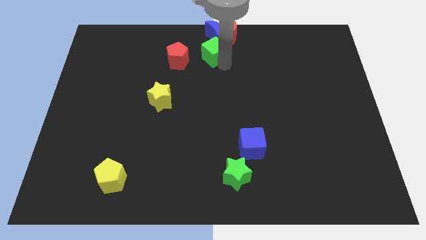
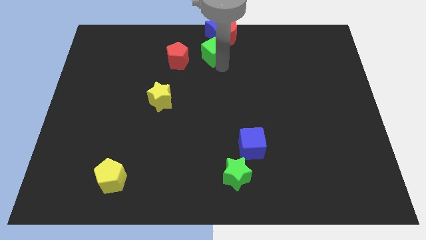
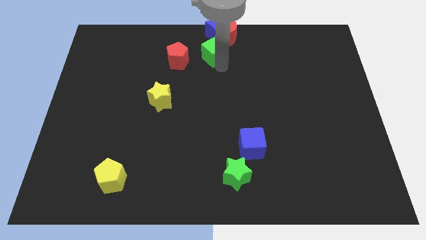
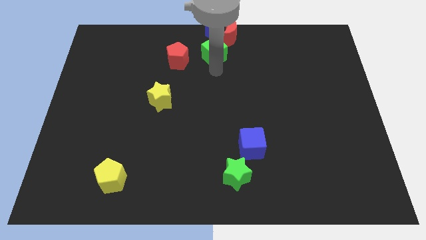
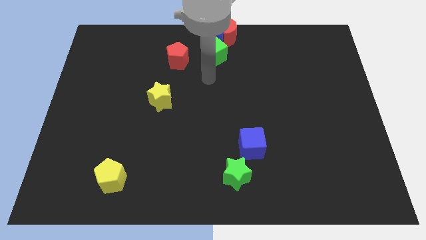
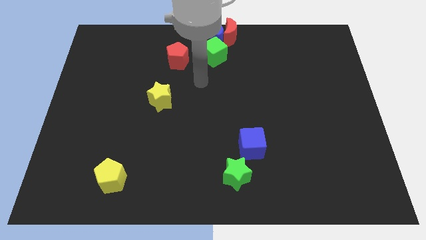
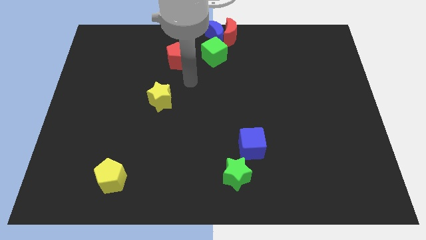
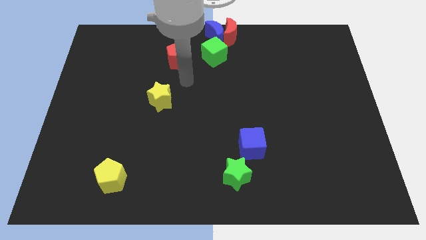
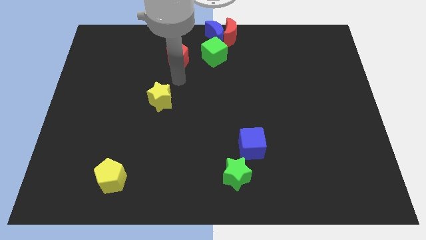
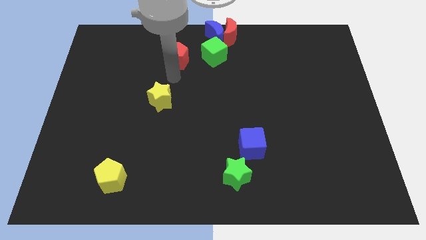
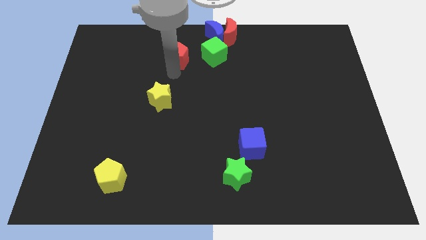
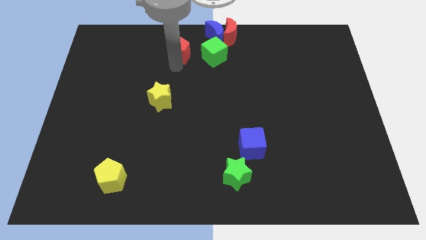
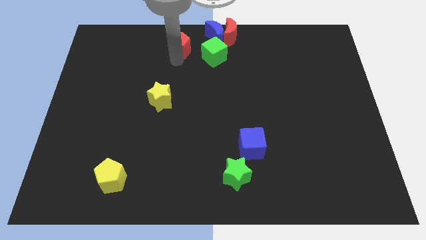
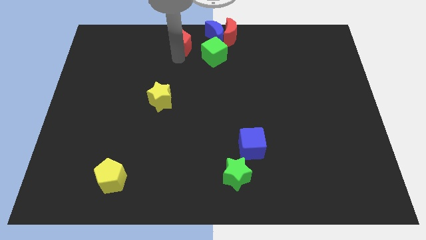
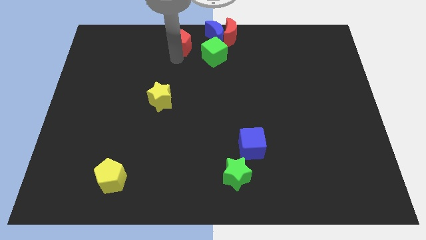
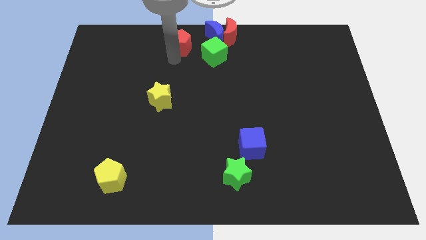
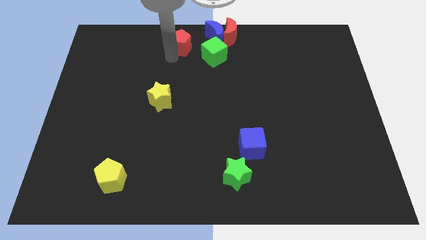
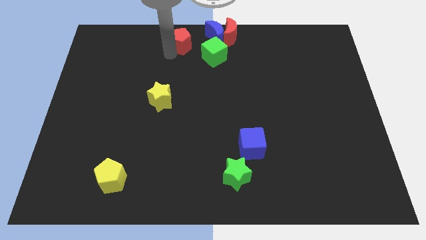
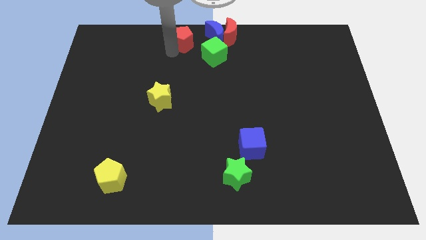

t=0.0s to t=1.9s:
slide the red pentagon to the left of the blue moon

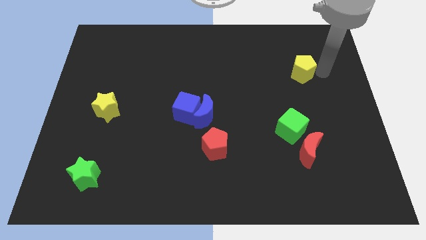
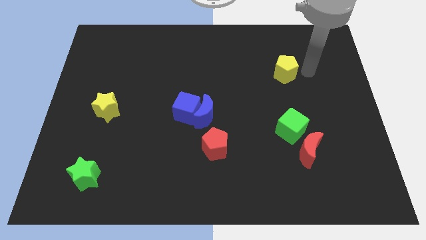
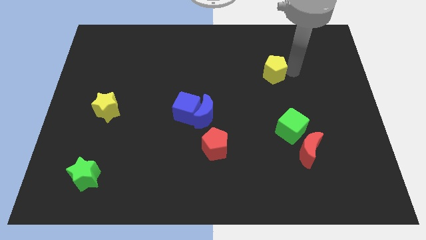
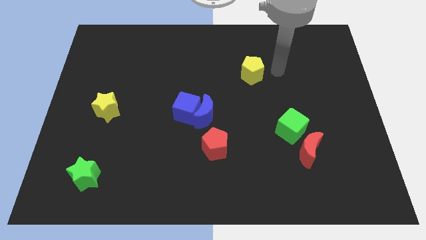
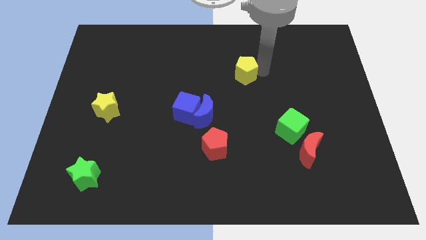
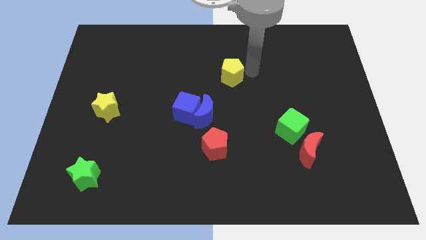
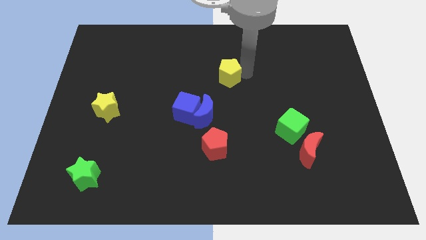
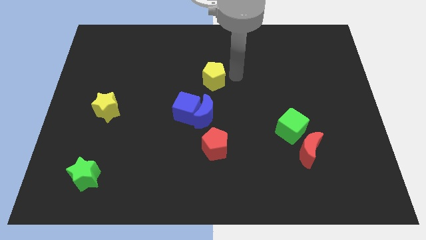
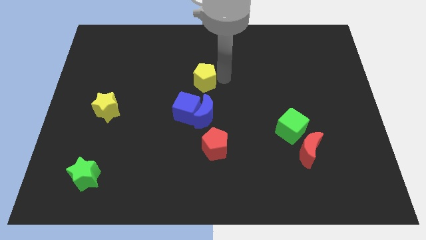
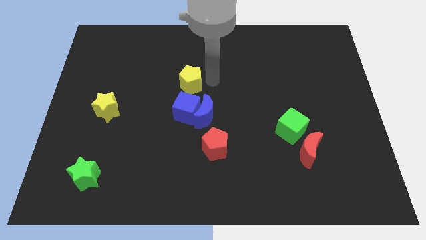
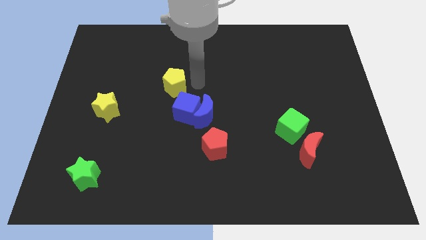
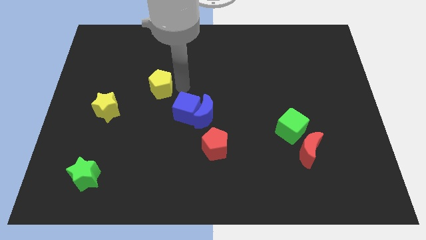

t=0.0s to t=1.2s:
drag the yellow pentagon towards the yellow star

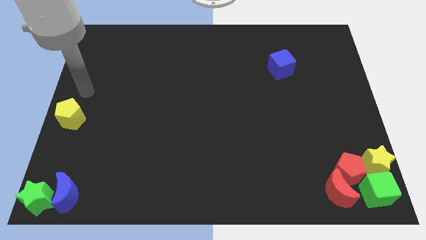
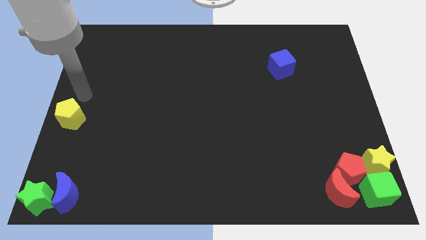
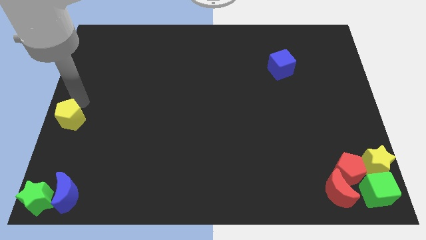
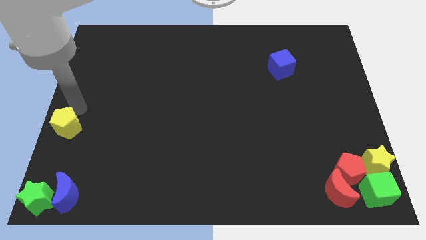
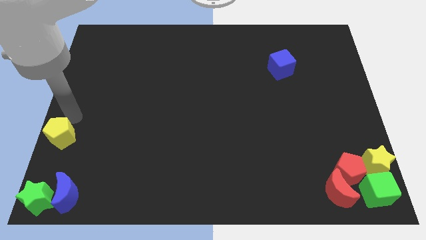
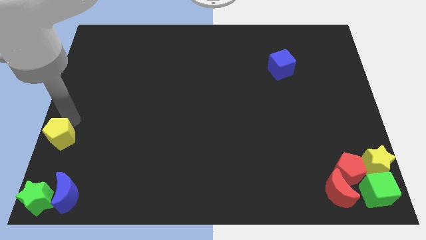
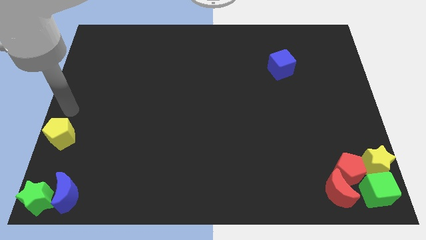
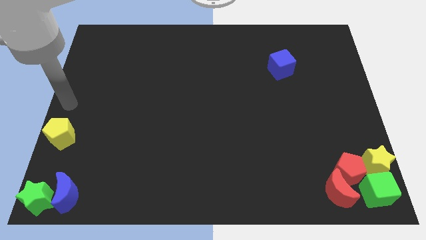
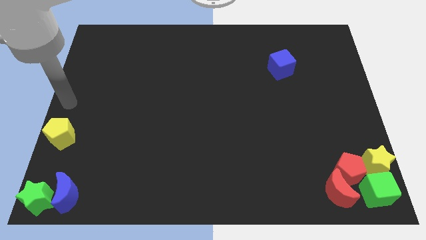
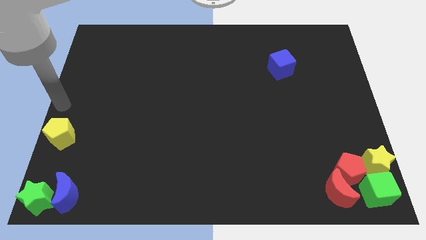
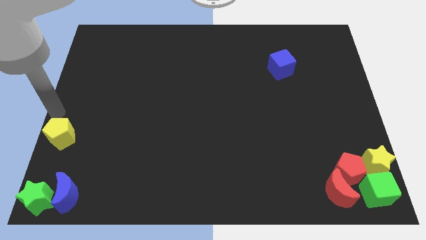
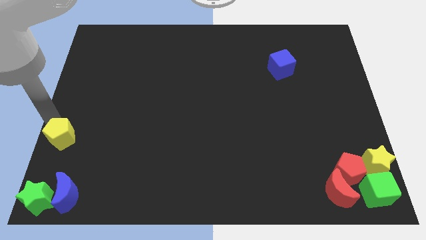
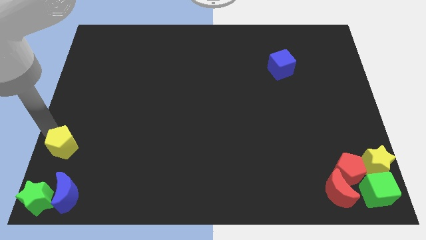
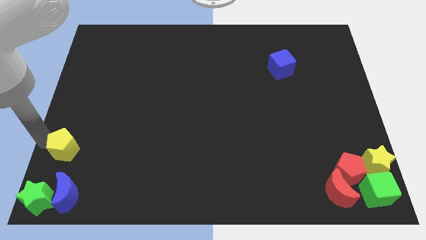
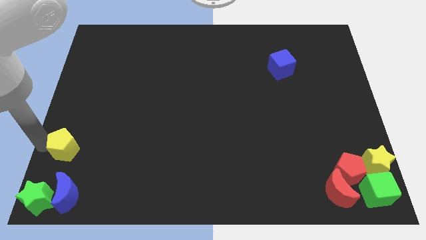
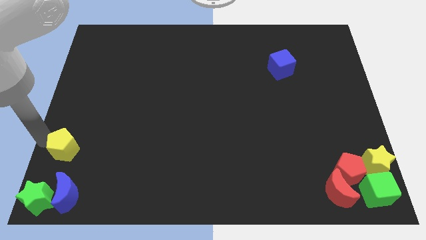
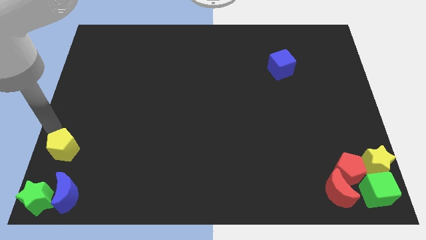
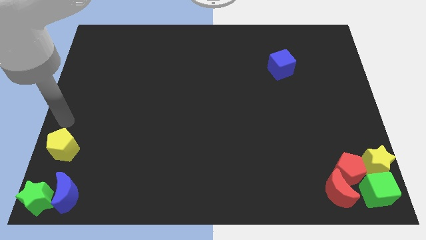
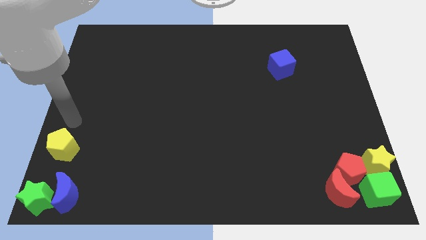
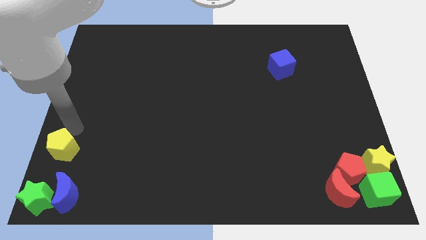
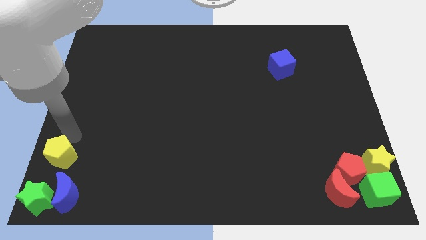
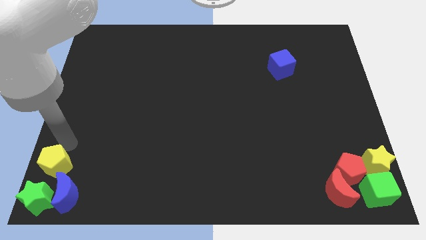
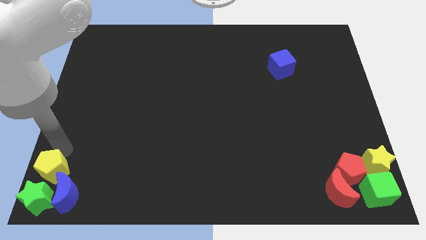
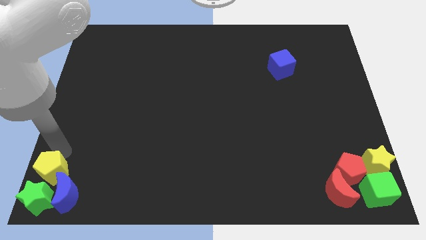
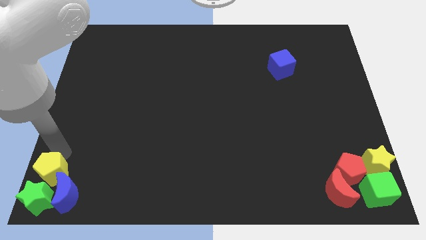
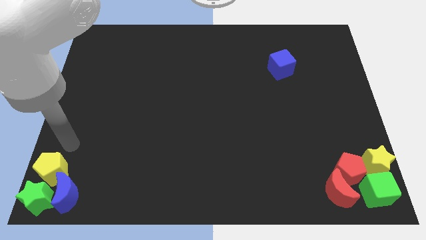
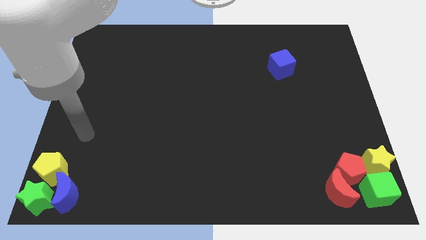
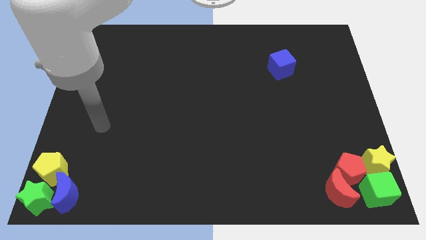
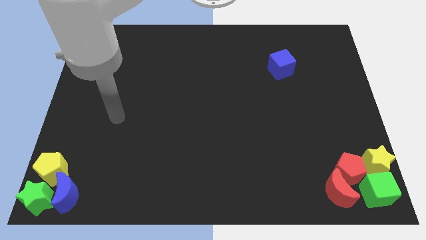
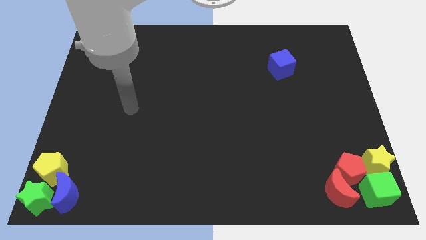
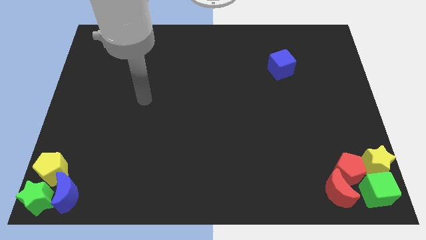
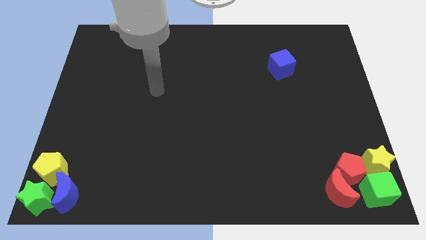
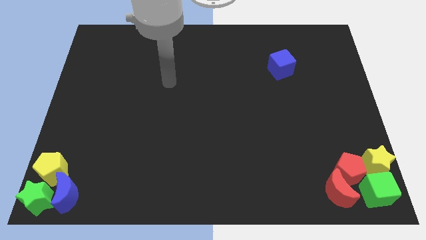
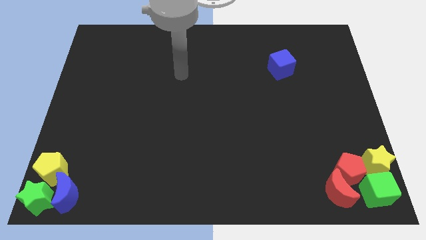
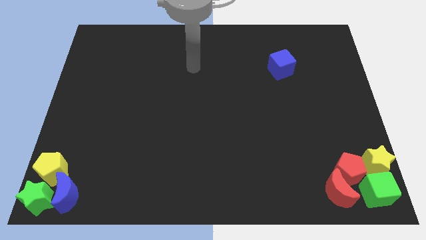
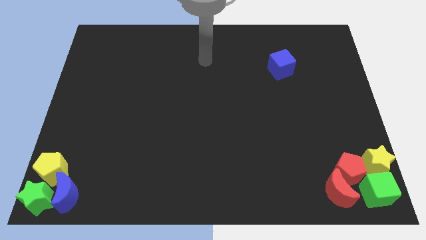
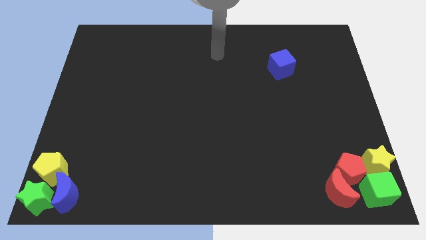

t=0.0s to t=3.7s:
push the yellow pentagon into the green star and blue moon

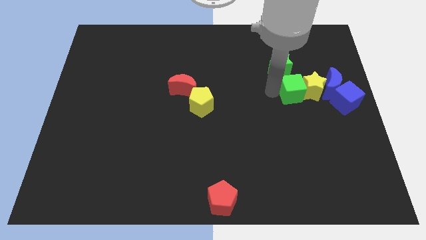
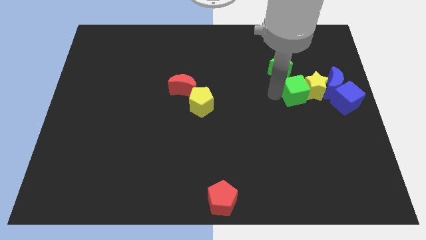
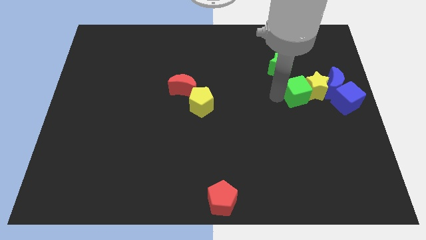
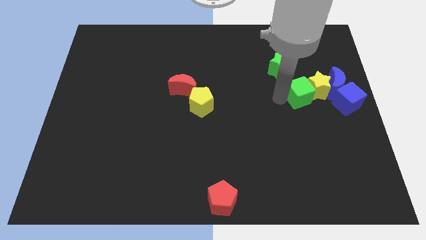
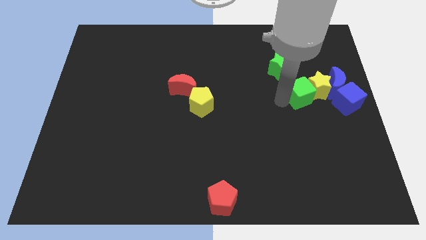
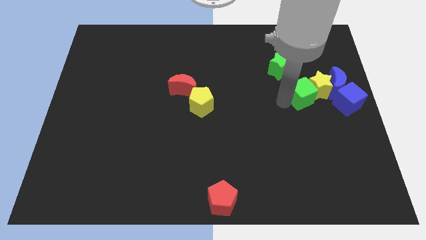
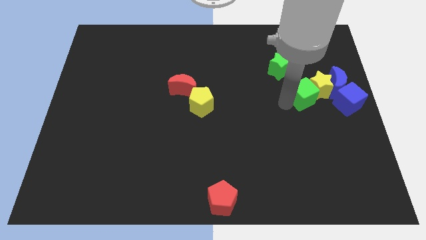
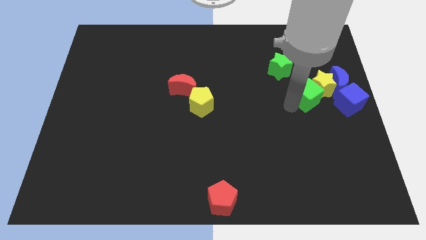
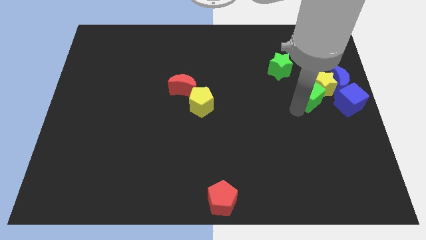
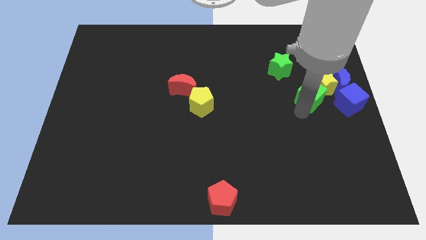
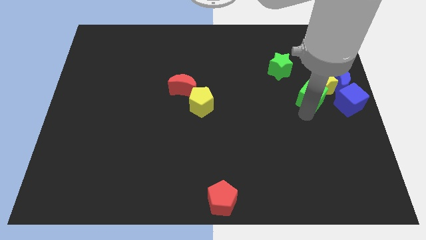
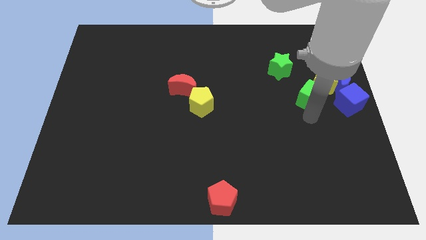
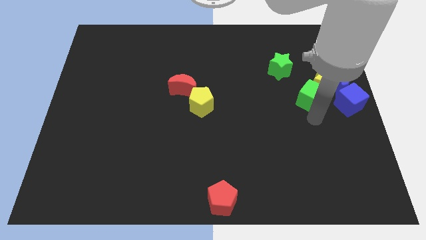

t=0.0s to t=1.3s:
push the green cube into the yellow star

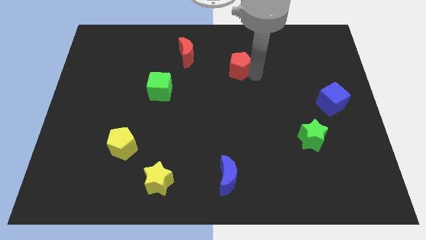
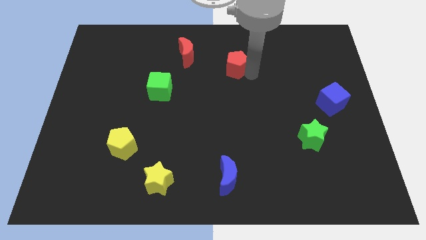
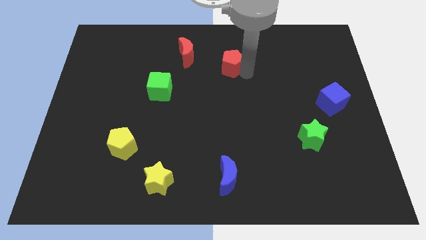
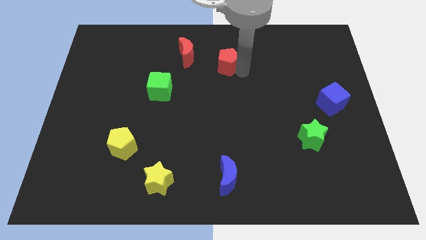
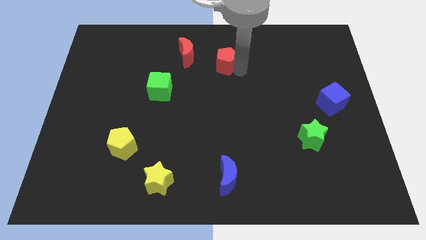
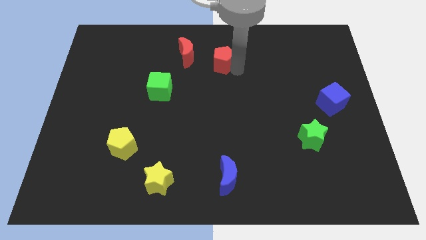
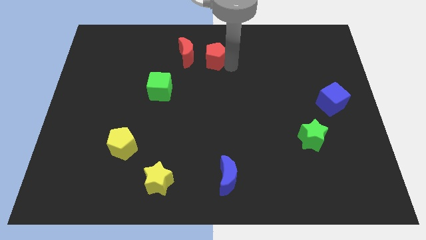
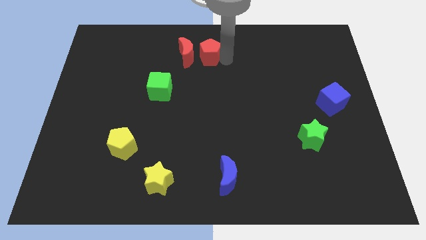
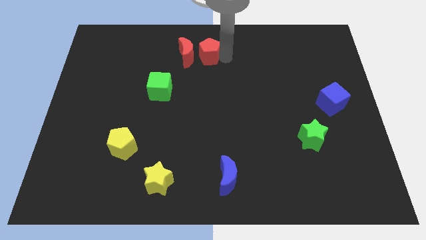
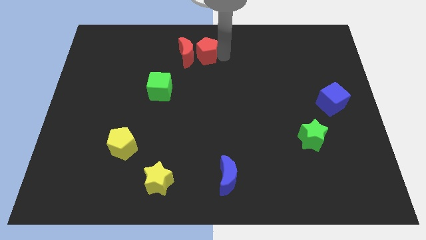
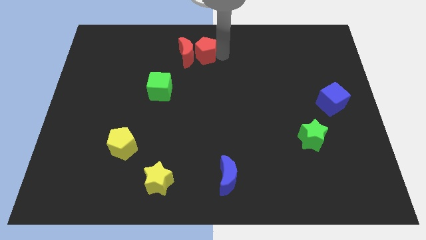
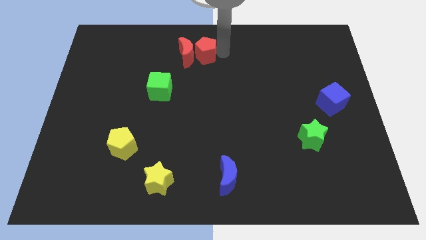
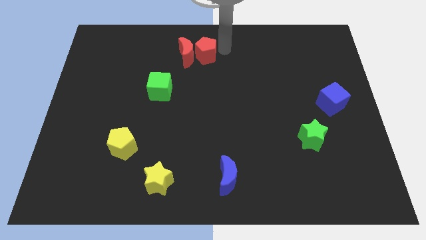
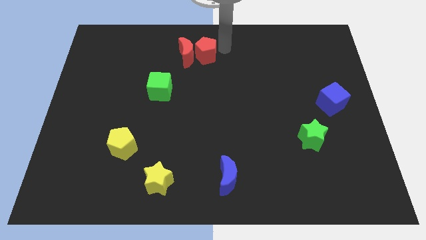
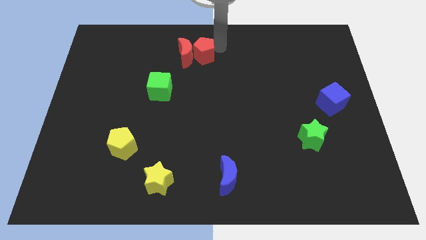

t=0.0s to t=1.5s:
push the red pentagon to the right of the red crescent
